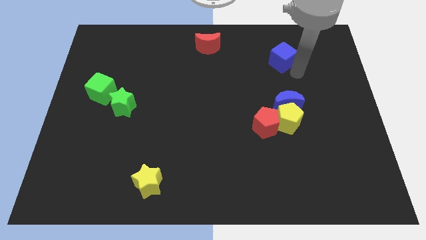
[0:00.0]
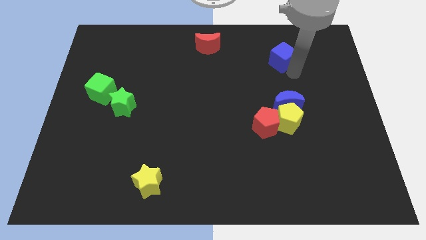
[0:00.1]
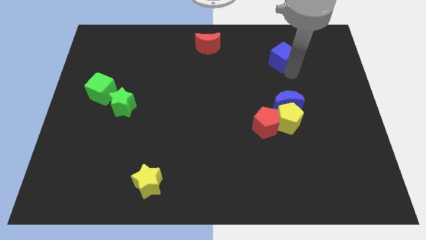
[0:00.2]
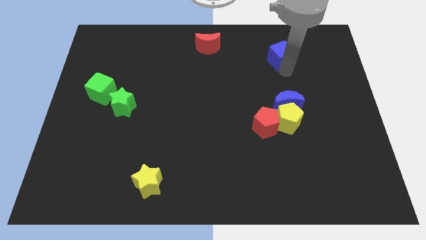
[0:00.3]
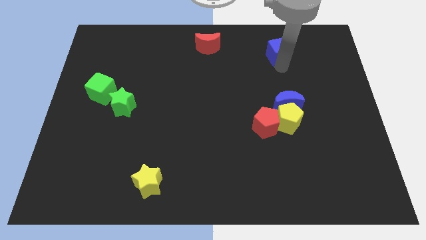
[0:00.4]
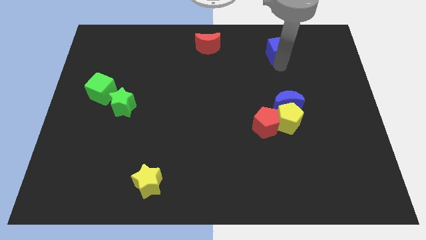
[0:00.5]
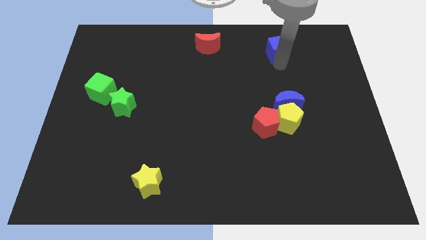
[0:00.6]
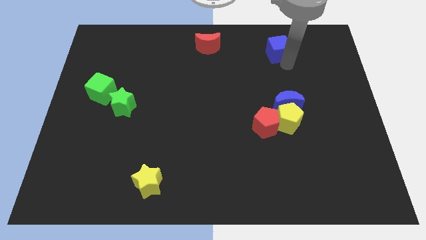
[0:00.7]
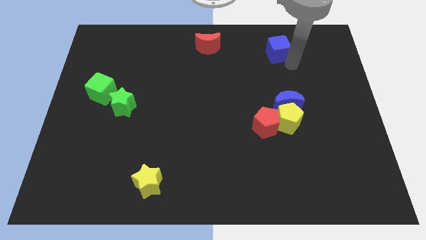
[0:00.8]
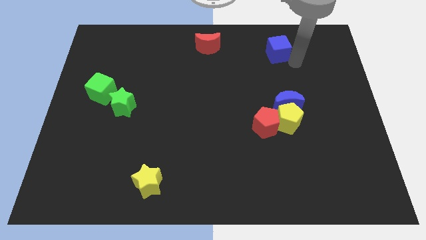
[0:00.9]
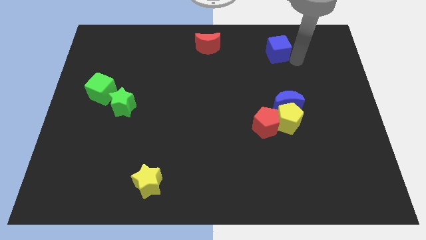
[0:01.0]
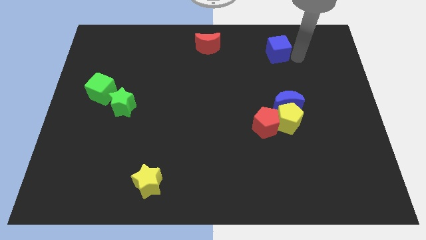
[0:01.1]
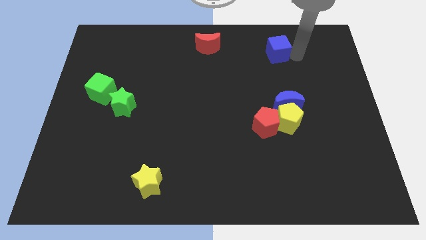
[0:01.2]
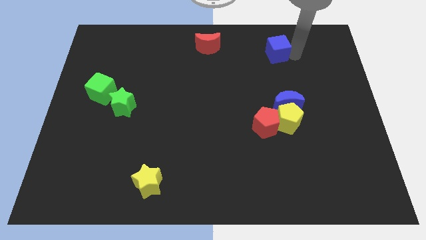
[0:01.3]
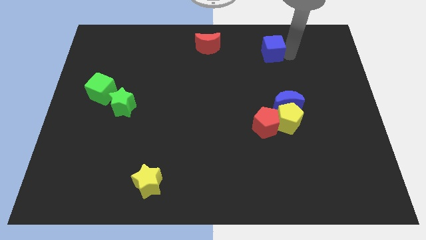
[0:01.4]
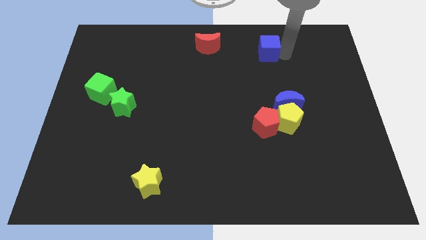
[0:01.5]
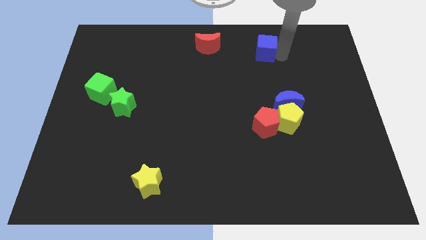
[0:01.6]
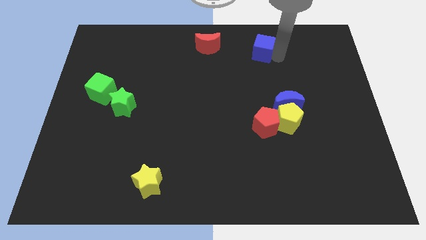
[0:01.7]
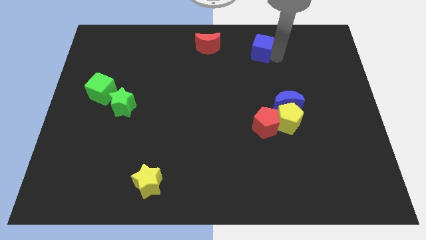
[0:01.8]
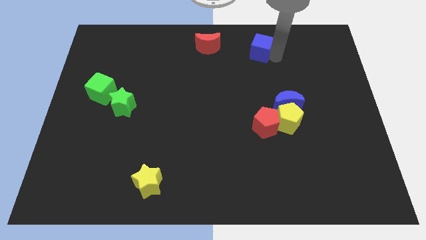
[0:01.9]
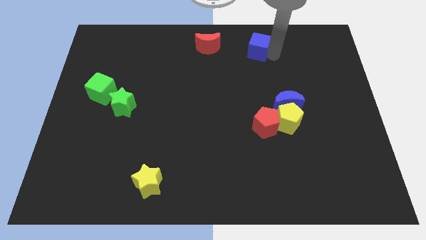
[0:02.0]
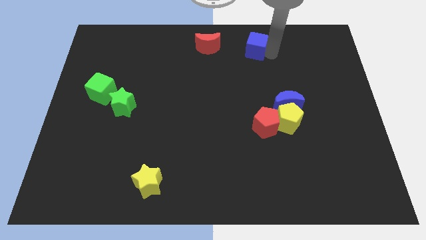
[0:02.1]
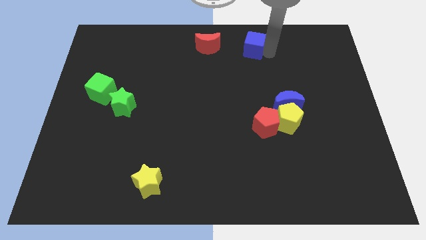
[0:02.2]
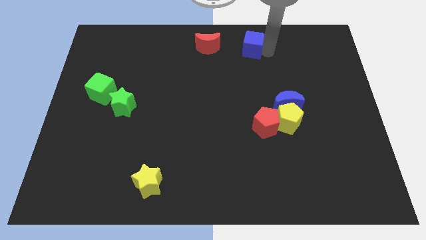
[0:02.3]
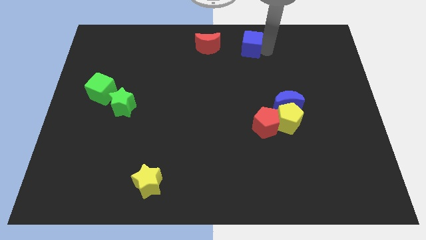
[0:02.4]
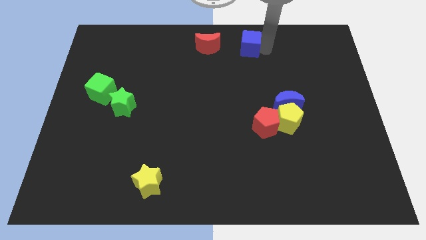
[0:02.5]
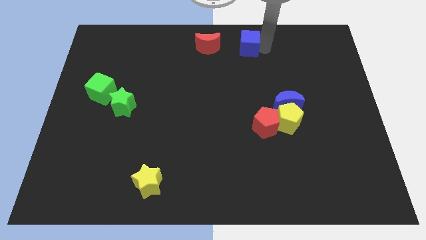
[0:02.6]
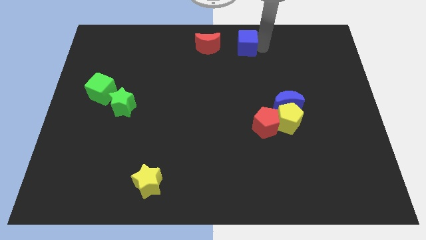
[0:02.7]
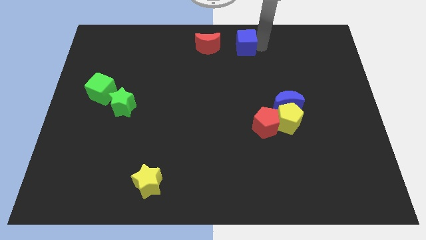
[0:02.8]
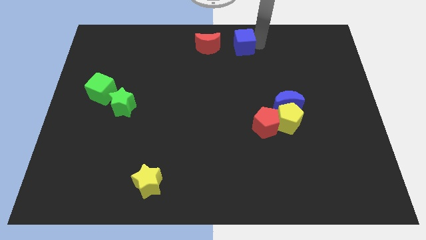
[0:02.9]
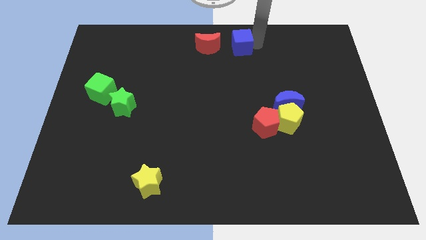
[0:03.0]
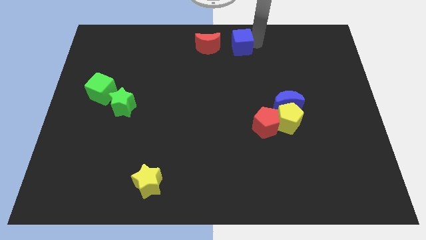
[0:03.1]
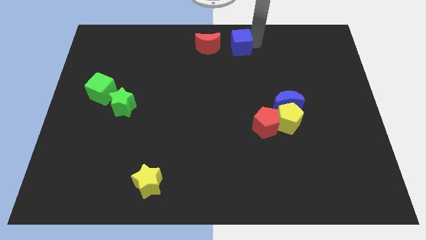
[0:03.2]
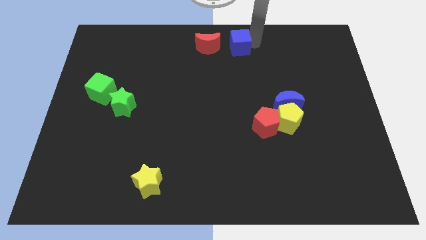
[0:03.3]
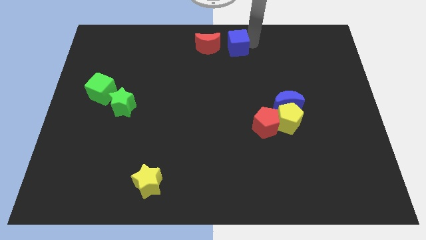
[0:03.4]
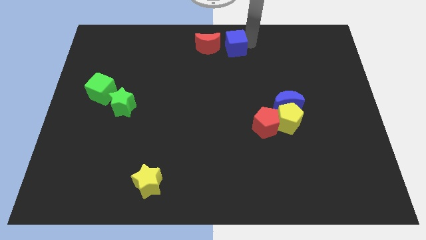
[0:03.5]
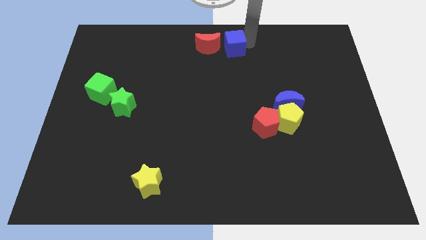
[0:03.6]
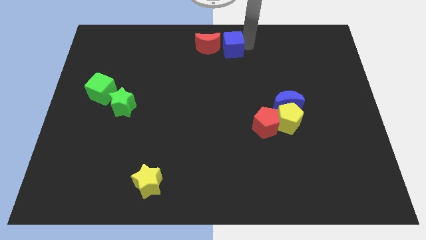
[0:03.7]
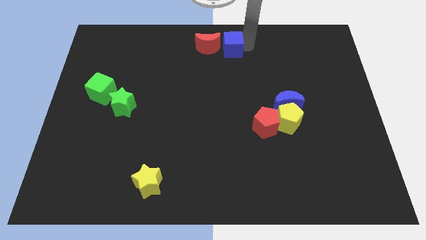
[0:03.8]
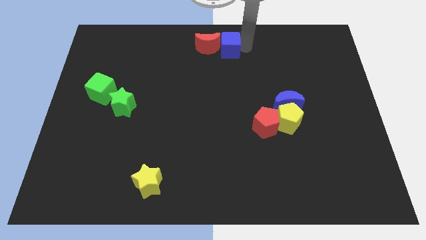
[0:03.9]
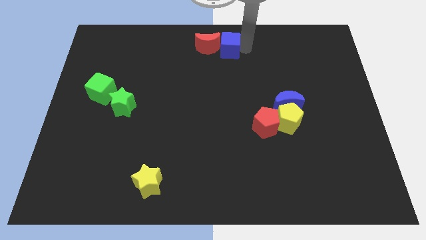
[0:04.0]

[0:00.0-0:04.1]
put blue cube to the right of red moon

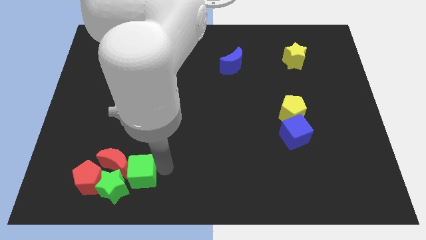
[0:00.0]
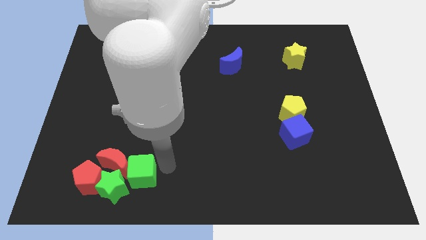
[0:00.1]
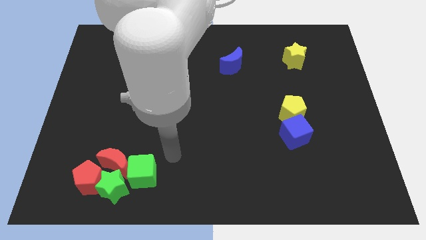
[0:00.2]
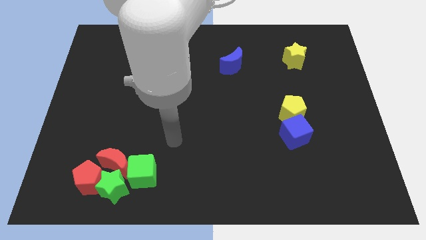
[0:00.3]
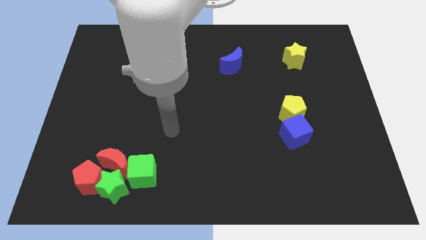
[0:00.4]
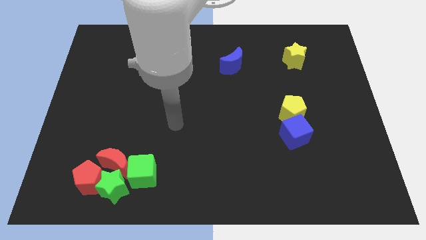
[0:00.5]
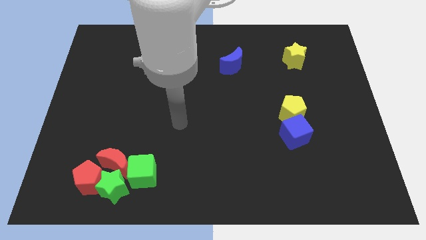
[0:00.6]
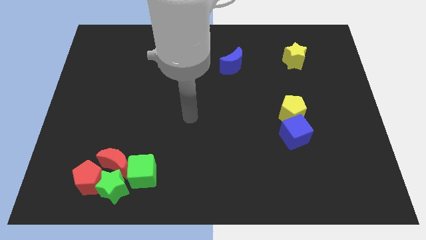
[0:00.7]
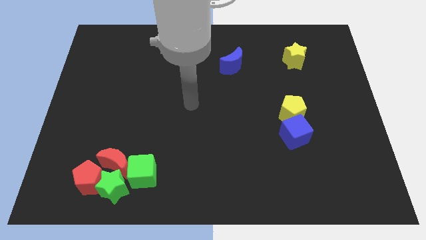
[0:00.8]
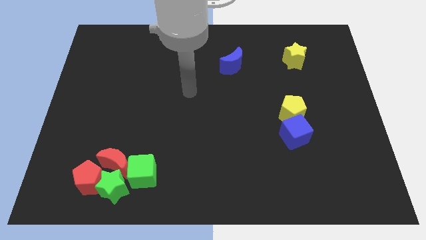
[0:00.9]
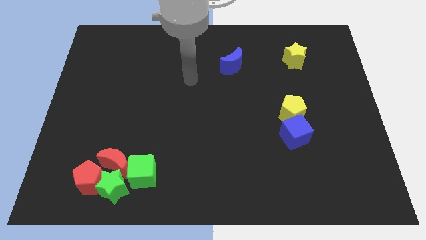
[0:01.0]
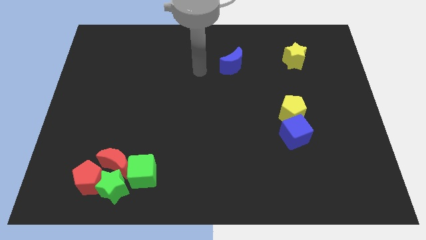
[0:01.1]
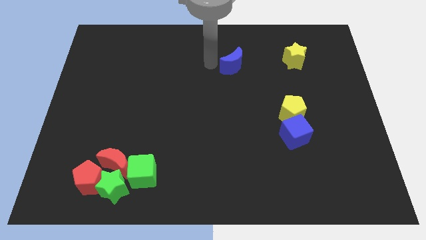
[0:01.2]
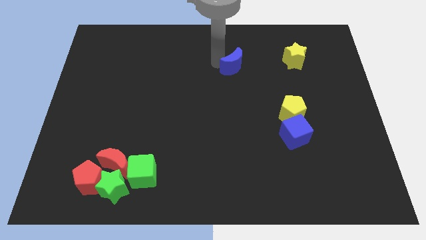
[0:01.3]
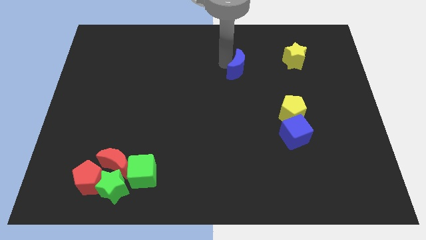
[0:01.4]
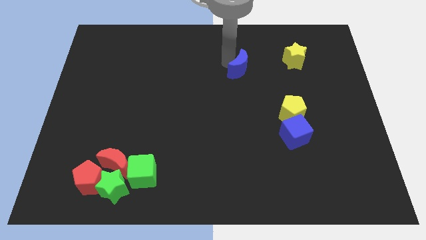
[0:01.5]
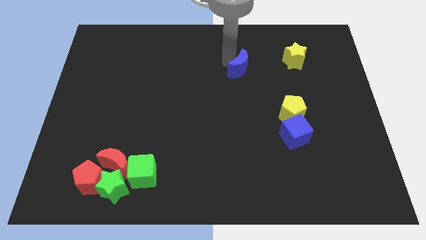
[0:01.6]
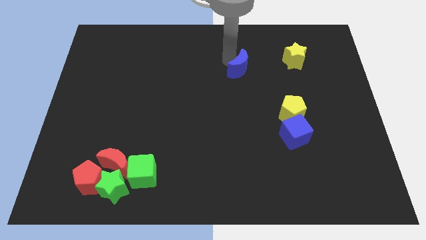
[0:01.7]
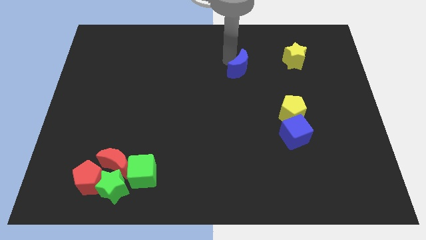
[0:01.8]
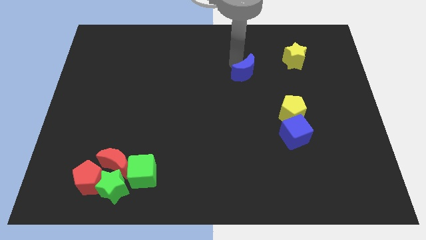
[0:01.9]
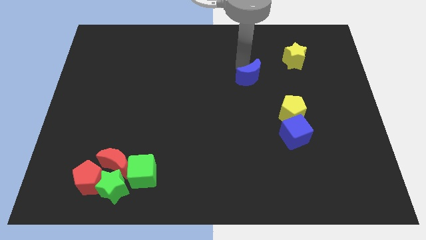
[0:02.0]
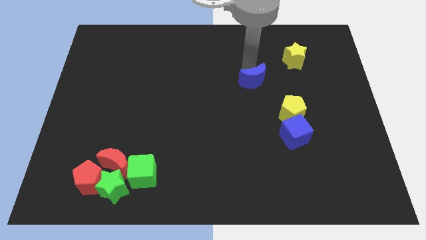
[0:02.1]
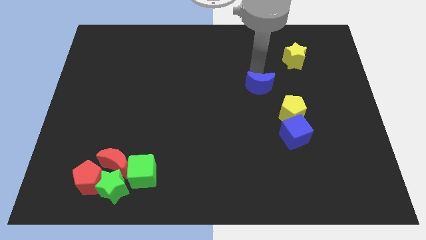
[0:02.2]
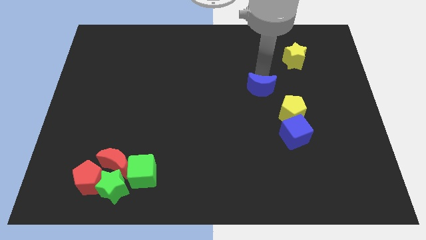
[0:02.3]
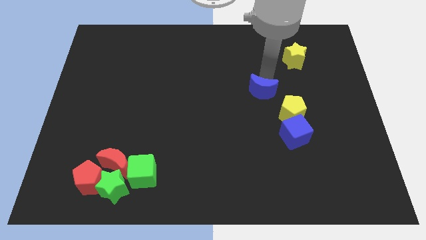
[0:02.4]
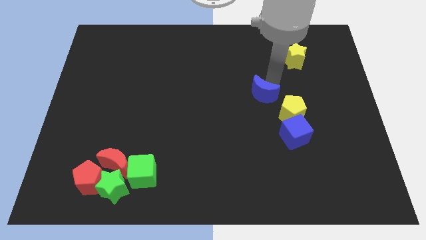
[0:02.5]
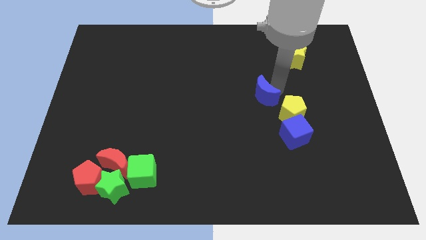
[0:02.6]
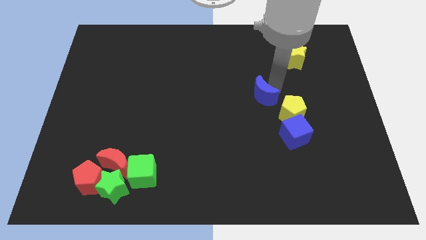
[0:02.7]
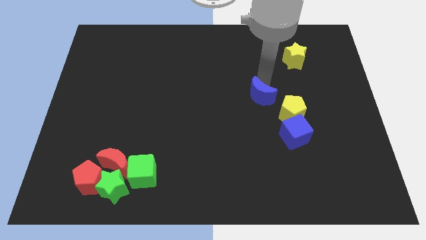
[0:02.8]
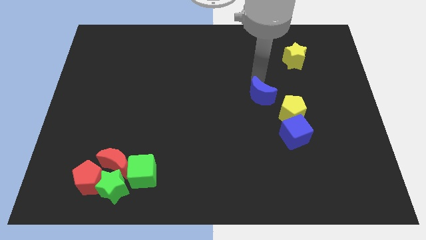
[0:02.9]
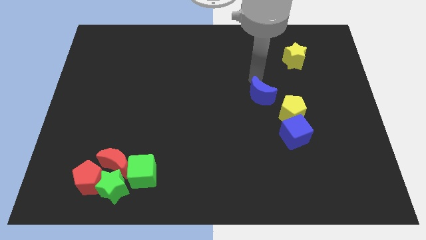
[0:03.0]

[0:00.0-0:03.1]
slide the blue moon diagonally bottom left to the yellow star

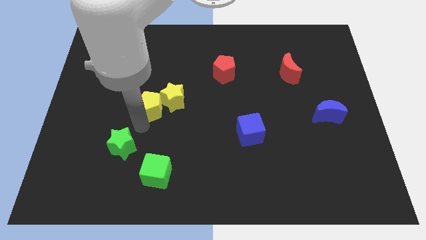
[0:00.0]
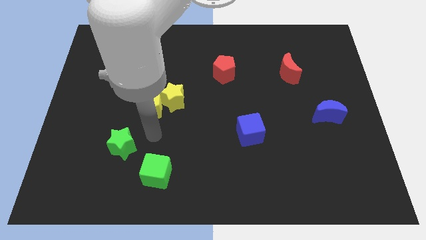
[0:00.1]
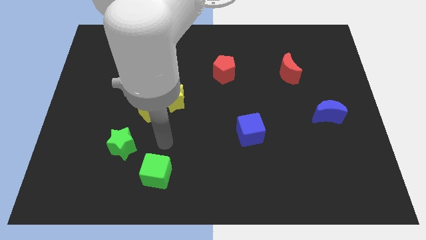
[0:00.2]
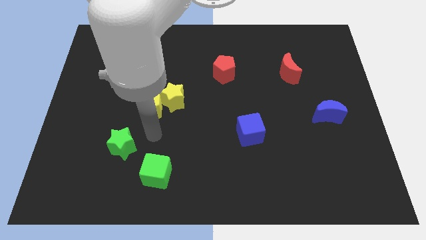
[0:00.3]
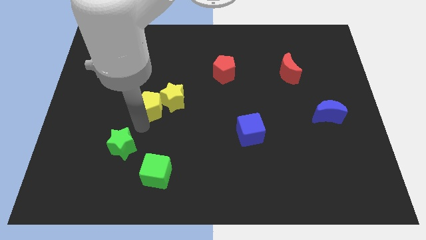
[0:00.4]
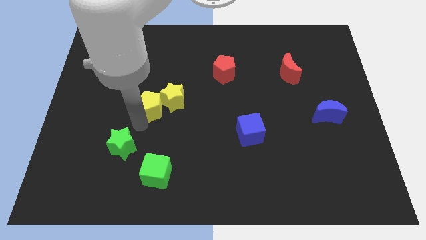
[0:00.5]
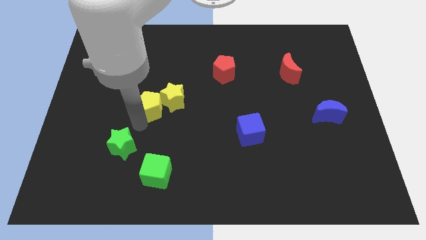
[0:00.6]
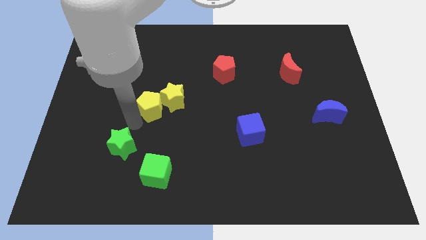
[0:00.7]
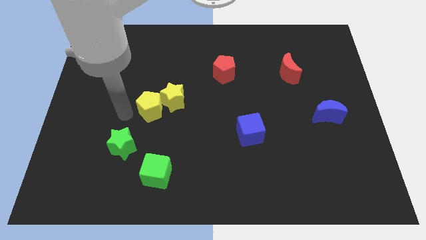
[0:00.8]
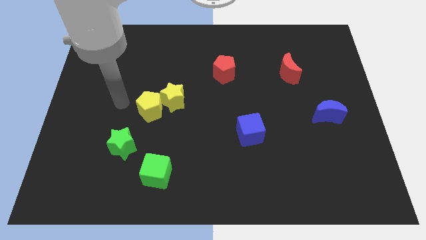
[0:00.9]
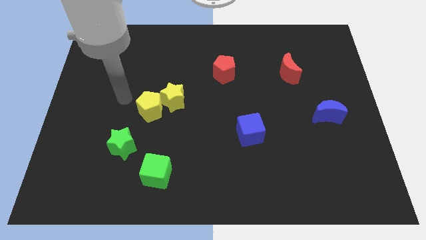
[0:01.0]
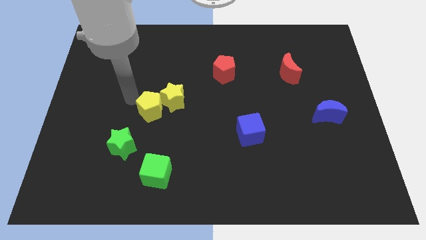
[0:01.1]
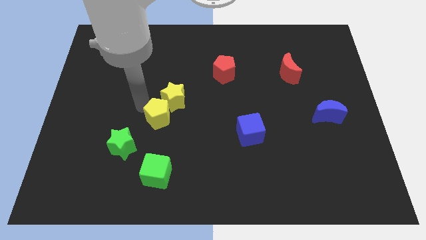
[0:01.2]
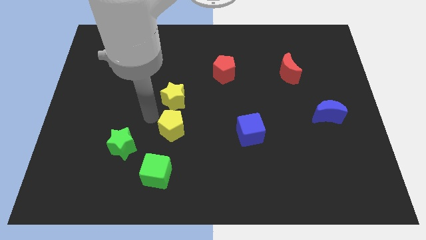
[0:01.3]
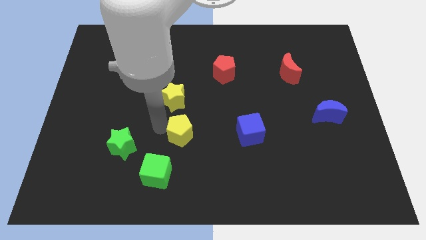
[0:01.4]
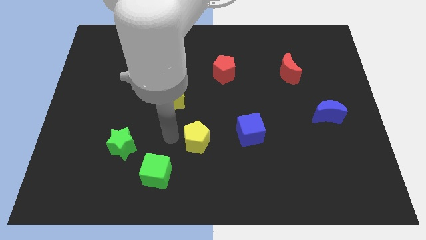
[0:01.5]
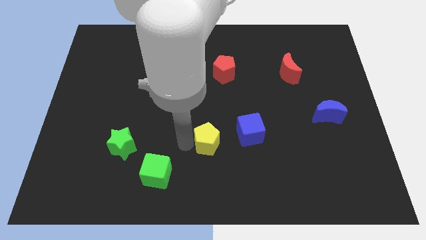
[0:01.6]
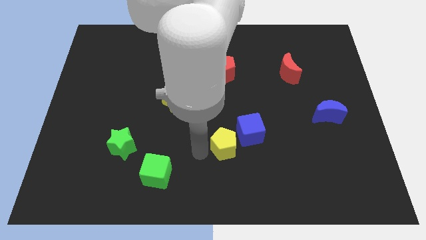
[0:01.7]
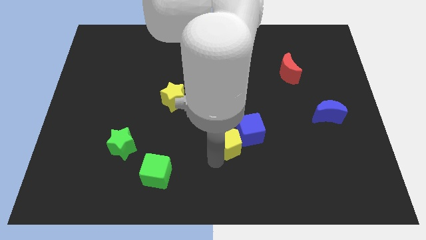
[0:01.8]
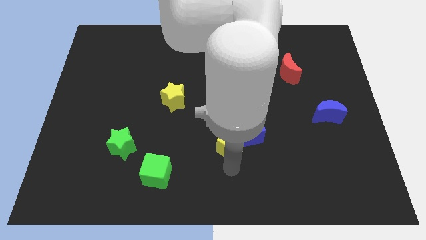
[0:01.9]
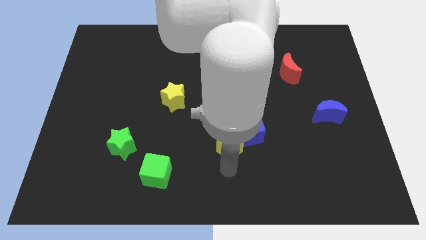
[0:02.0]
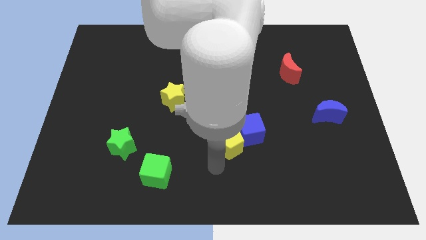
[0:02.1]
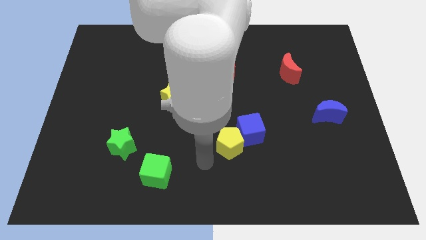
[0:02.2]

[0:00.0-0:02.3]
separate the yellow pentagon and yellow star
